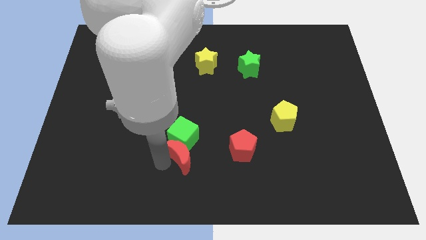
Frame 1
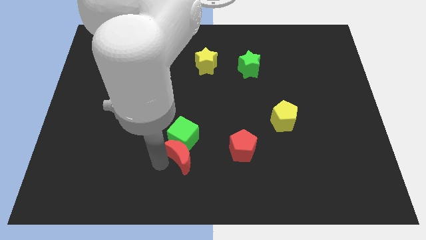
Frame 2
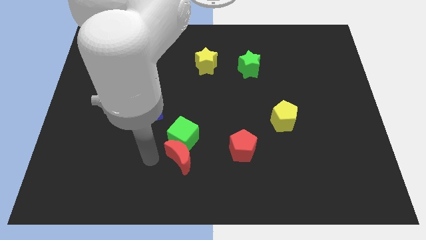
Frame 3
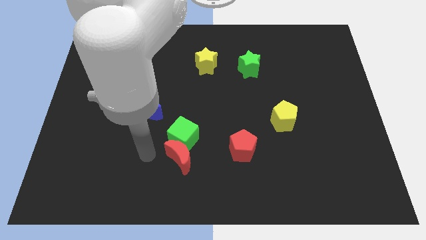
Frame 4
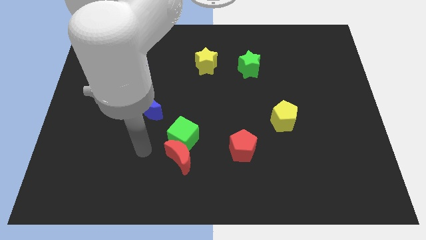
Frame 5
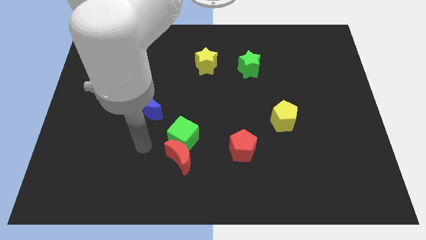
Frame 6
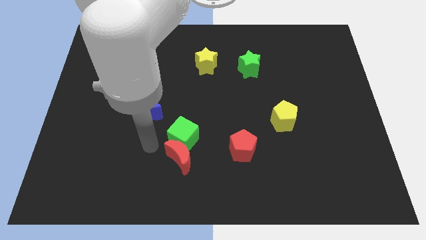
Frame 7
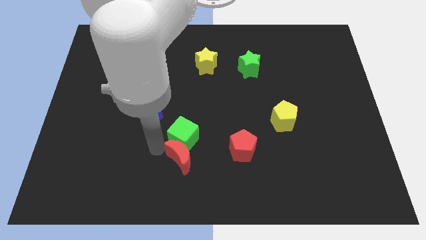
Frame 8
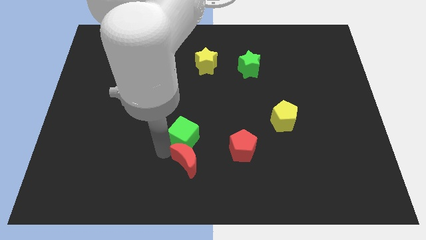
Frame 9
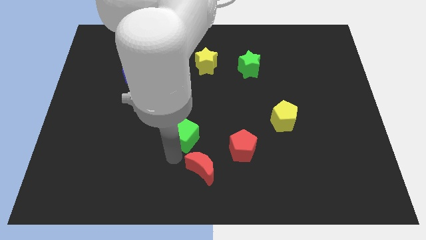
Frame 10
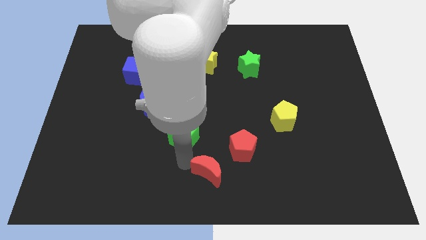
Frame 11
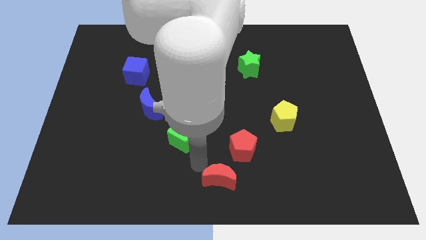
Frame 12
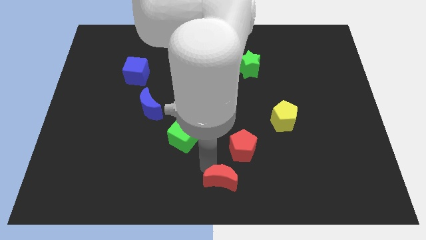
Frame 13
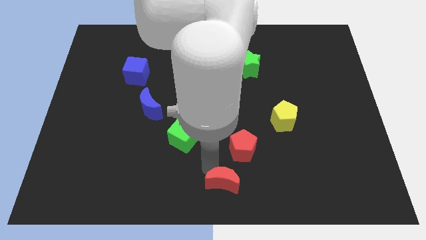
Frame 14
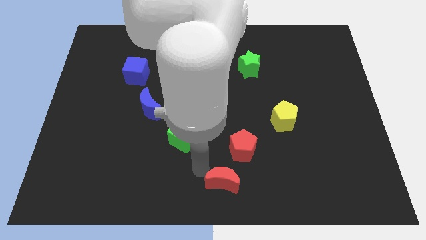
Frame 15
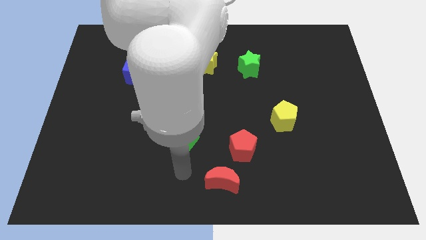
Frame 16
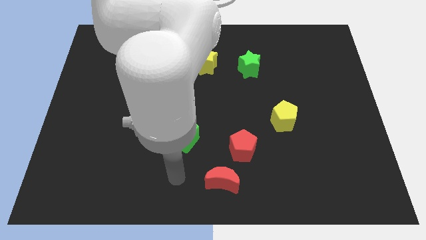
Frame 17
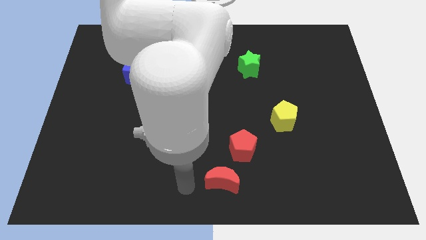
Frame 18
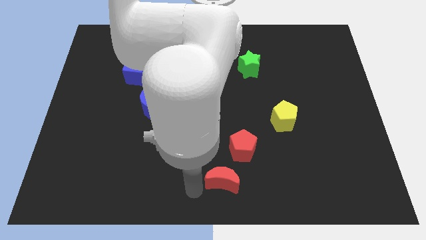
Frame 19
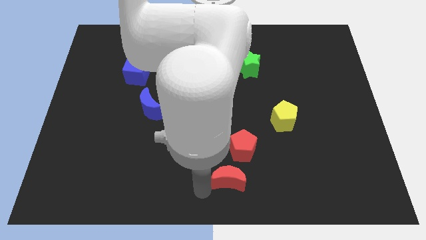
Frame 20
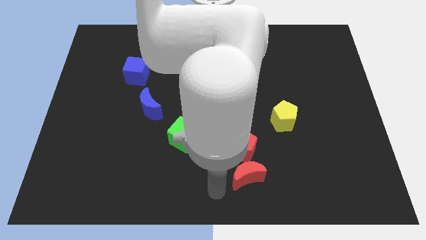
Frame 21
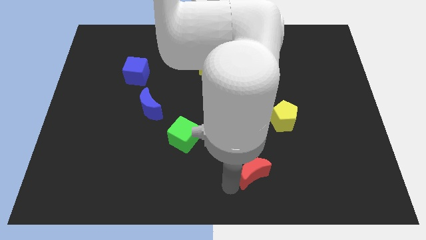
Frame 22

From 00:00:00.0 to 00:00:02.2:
move the red moon below the red pentagon

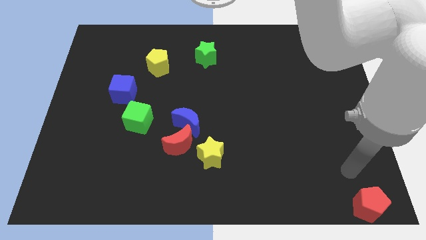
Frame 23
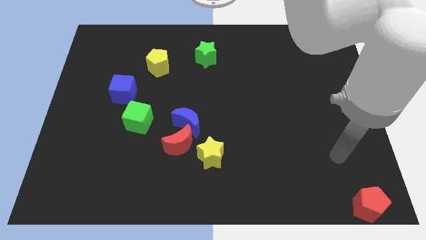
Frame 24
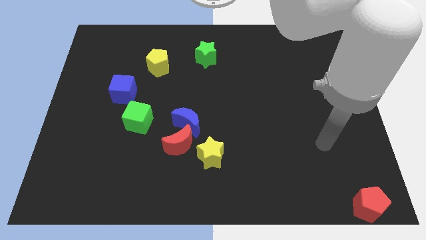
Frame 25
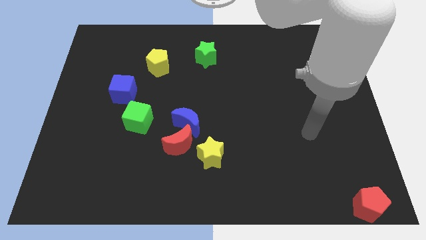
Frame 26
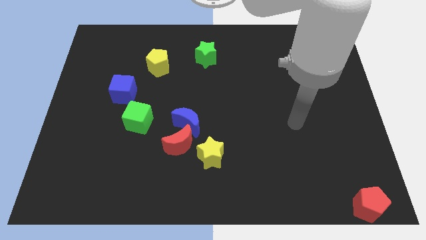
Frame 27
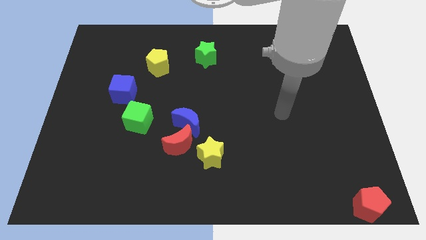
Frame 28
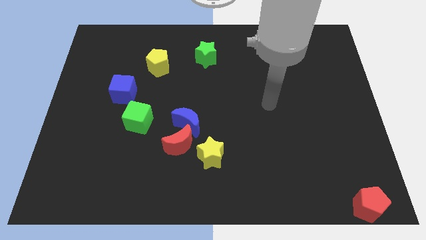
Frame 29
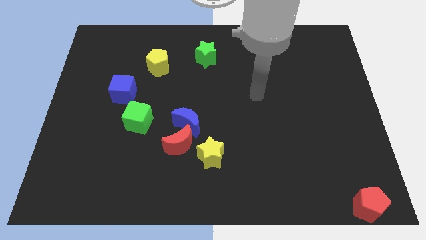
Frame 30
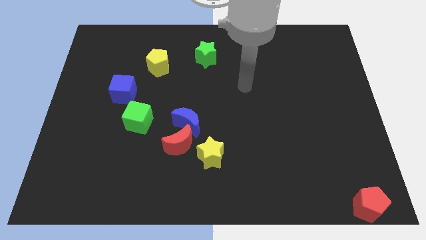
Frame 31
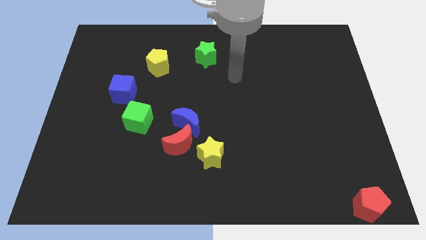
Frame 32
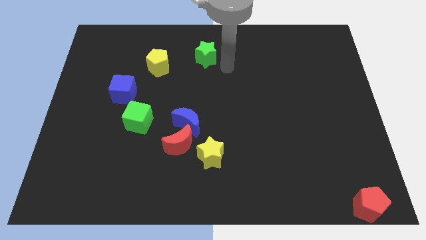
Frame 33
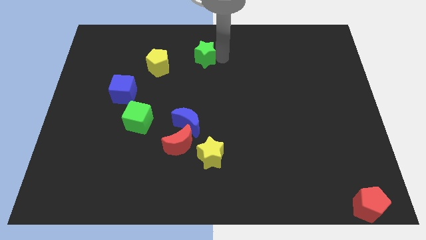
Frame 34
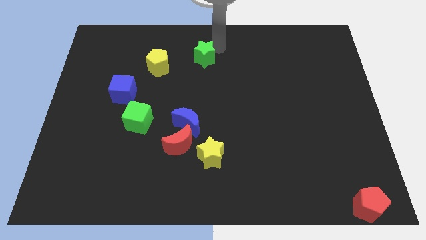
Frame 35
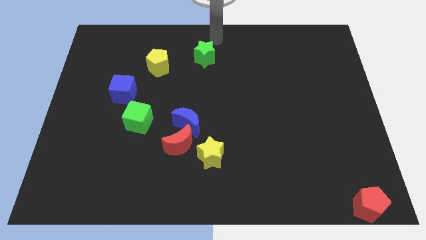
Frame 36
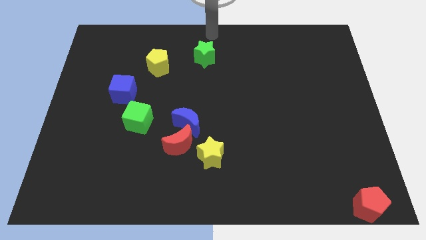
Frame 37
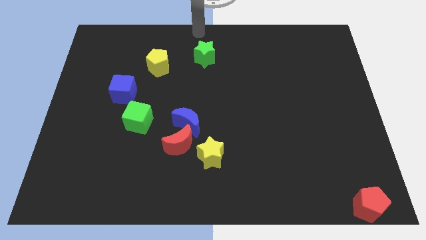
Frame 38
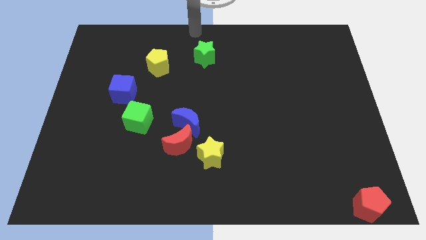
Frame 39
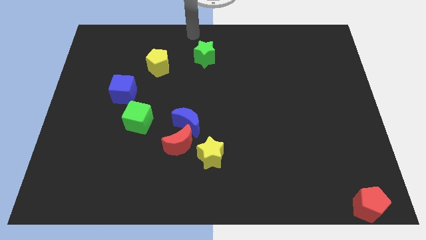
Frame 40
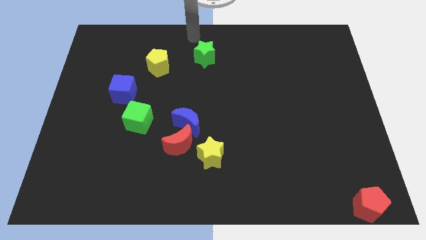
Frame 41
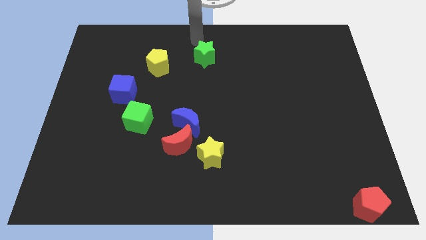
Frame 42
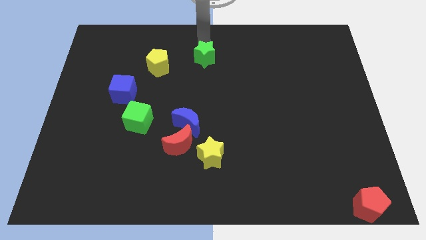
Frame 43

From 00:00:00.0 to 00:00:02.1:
move your arm to the top of the green star

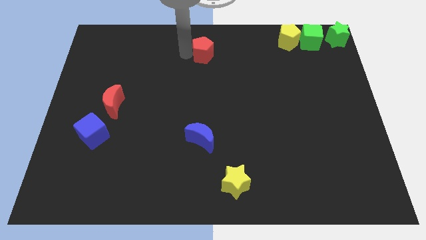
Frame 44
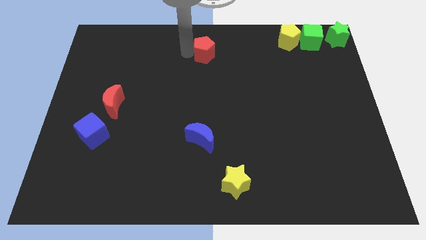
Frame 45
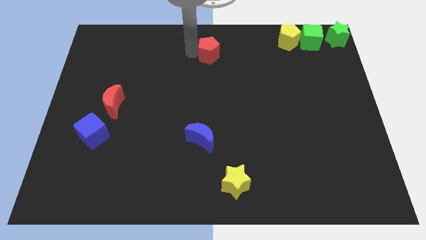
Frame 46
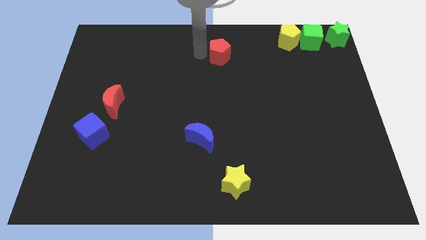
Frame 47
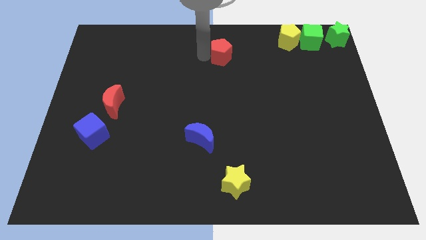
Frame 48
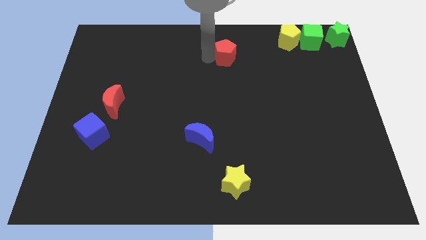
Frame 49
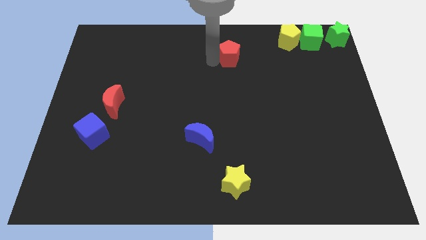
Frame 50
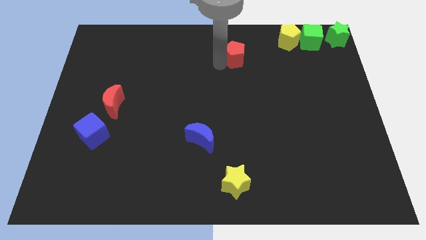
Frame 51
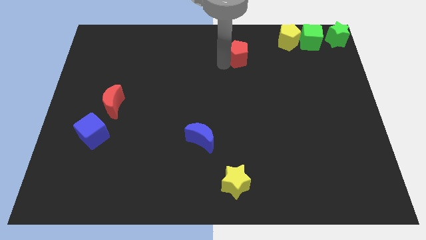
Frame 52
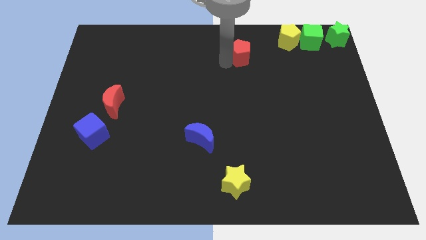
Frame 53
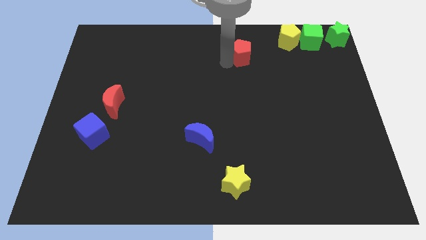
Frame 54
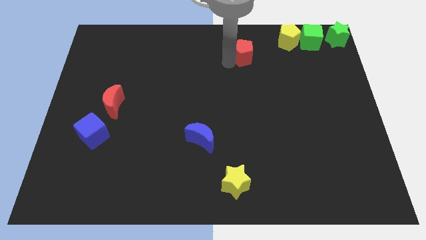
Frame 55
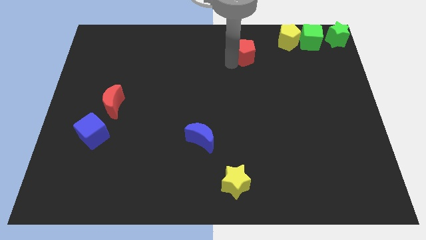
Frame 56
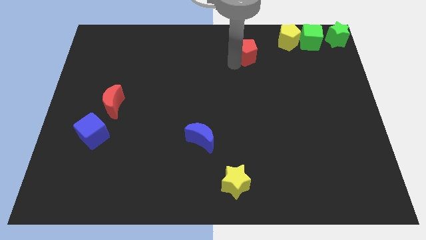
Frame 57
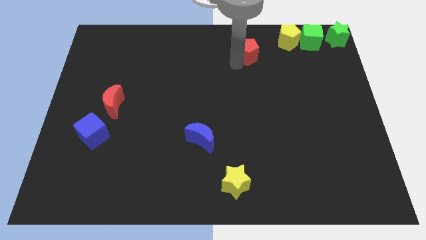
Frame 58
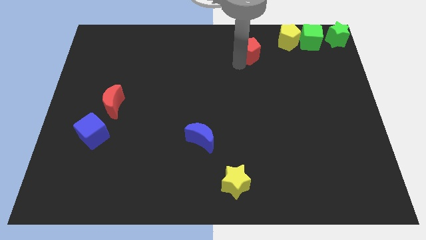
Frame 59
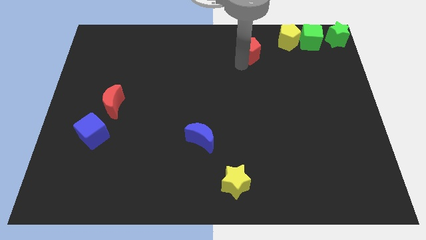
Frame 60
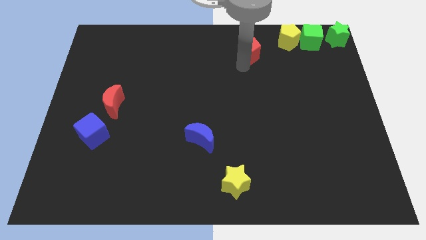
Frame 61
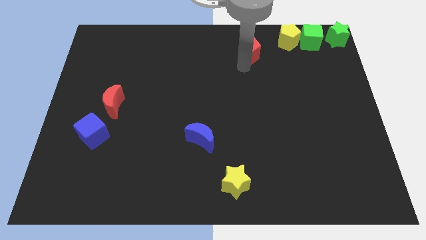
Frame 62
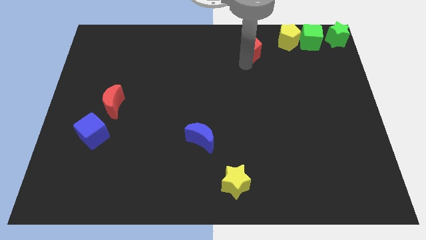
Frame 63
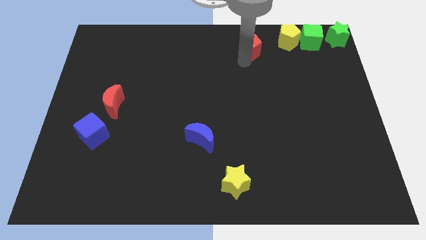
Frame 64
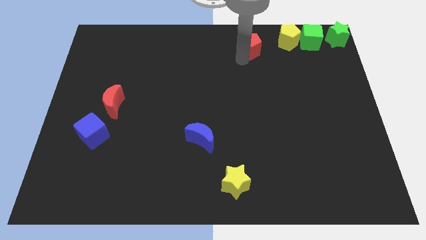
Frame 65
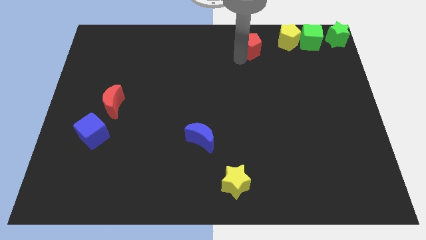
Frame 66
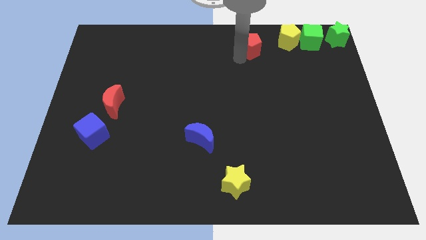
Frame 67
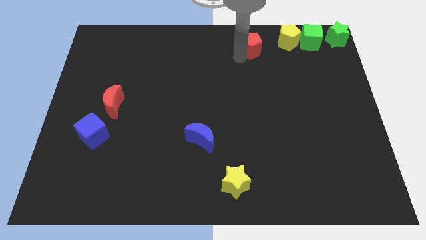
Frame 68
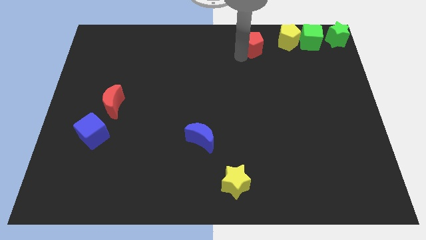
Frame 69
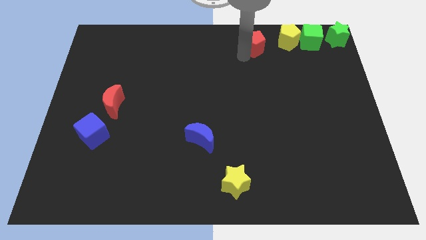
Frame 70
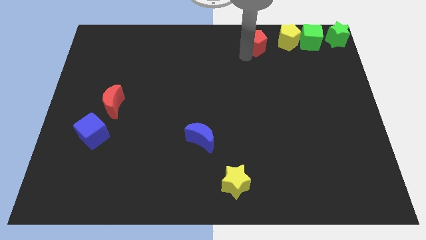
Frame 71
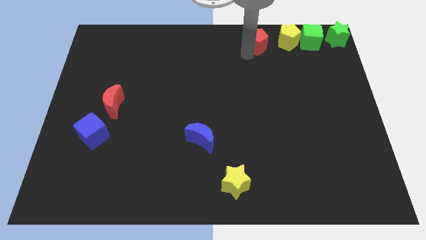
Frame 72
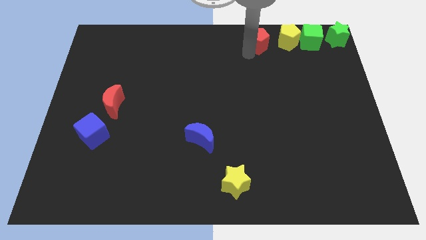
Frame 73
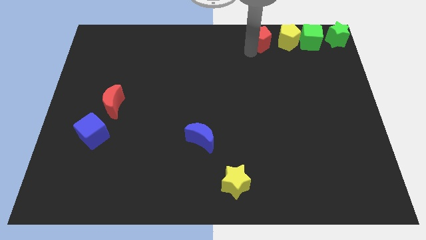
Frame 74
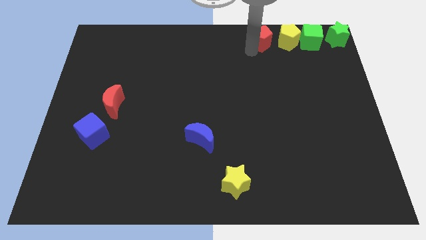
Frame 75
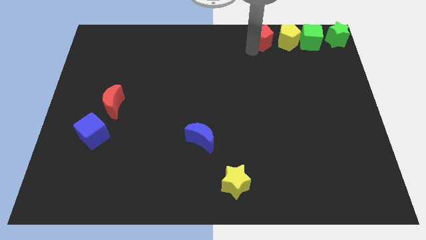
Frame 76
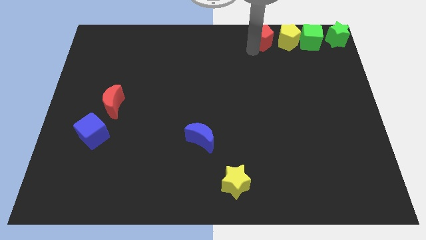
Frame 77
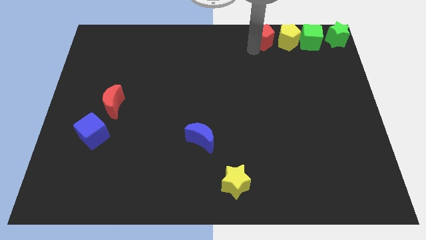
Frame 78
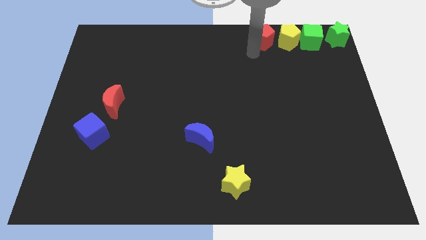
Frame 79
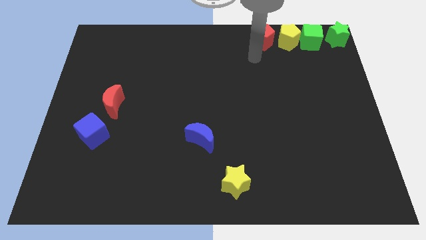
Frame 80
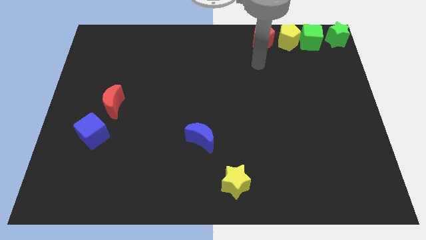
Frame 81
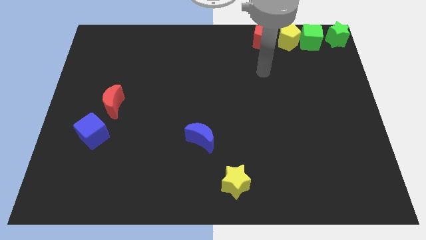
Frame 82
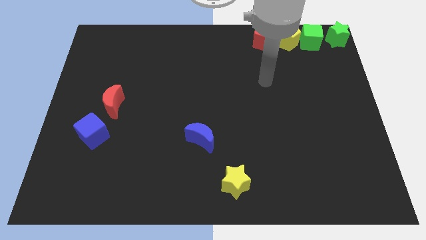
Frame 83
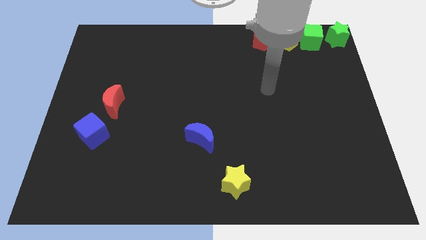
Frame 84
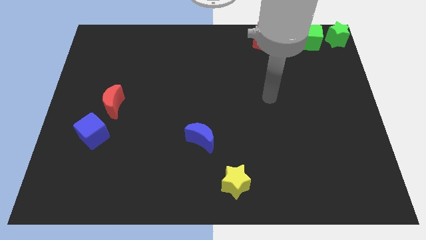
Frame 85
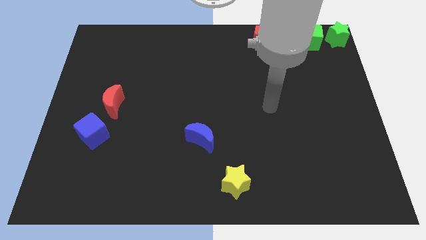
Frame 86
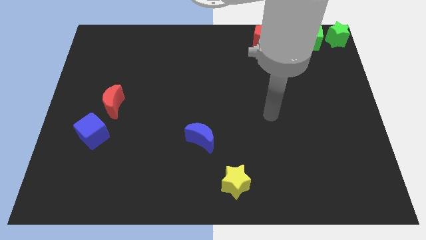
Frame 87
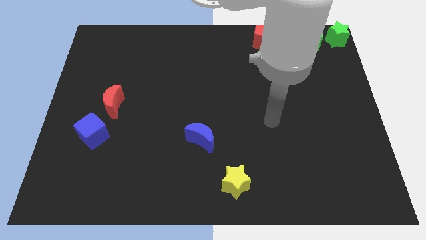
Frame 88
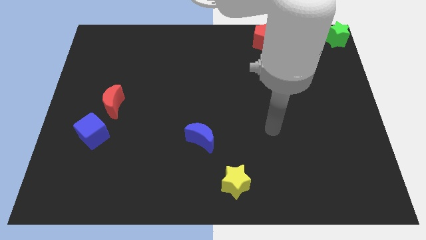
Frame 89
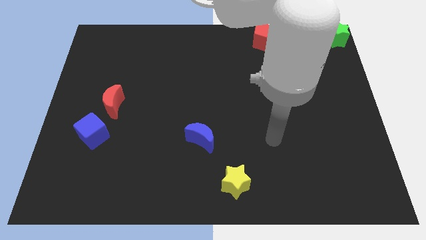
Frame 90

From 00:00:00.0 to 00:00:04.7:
push the red pentagon parallel left to the yellow pentagon
